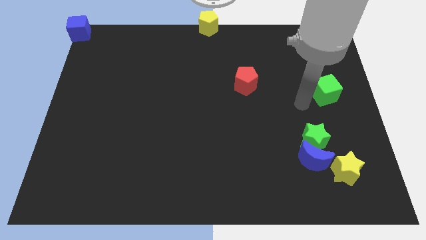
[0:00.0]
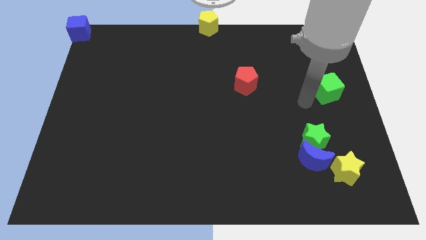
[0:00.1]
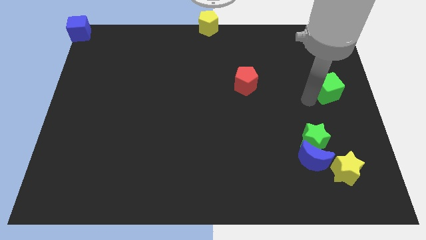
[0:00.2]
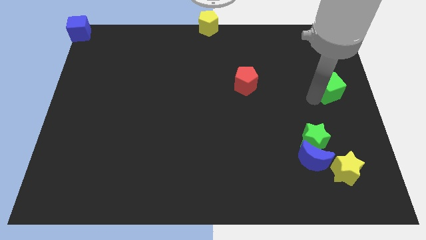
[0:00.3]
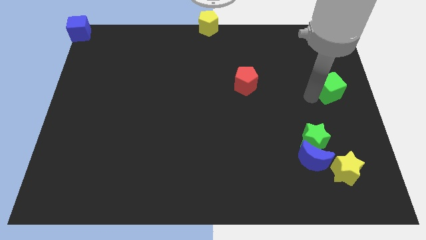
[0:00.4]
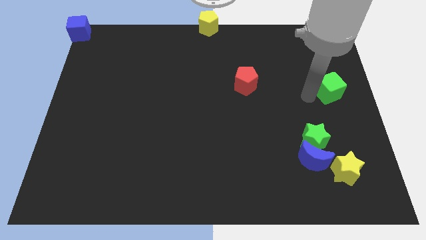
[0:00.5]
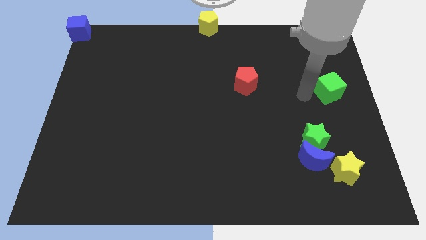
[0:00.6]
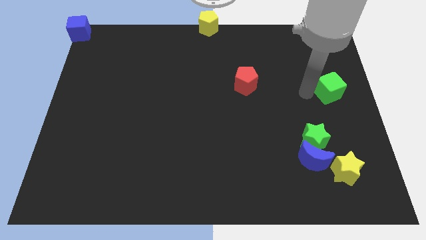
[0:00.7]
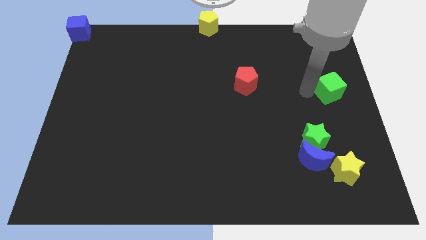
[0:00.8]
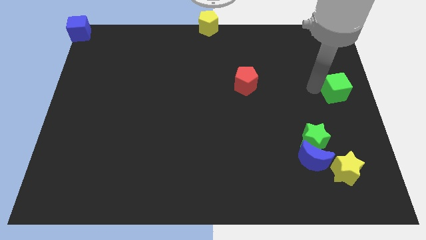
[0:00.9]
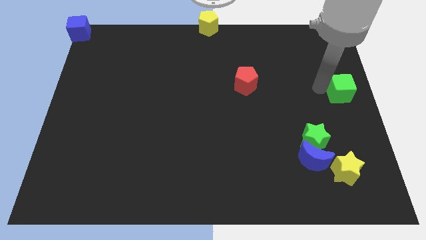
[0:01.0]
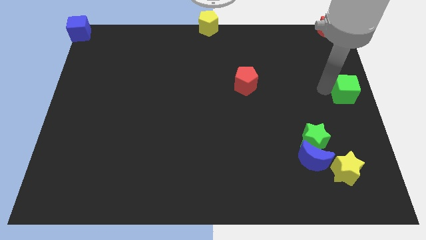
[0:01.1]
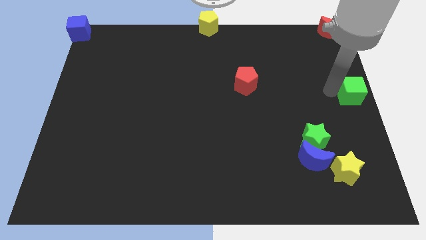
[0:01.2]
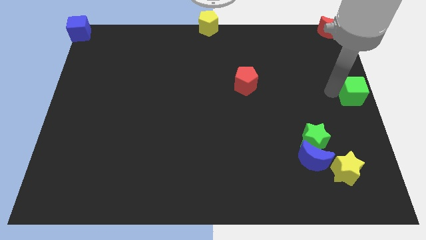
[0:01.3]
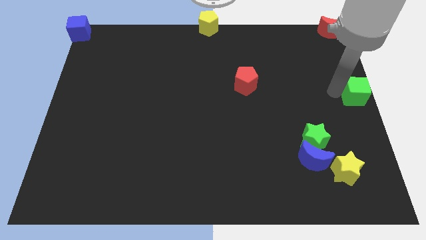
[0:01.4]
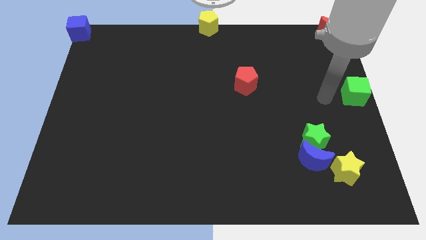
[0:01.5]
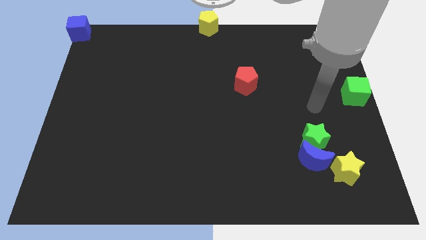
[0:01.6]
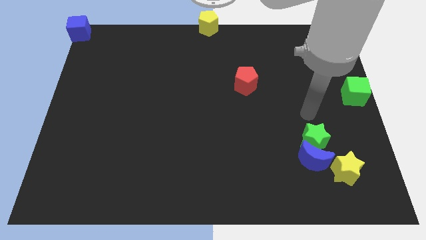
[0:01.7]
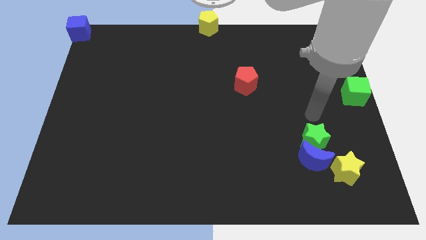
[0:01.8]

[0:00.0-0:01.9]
place the green cube to the center right of the board

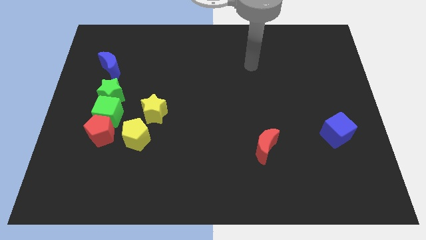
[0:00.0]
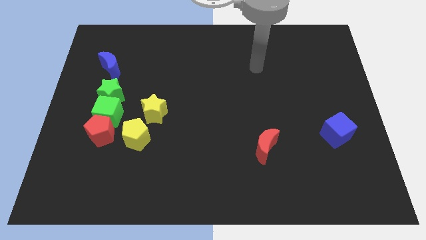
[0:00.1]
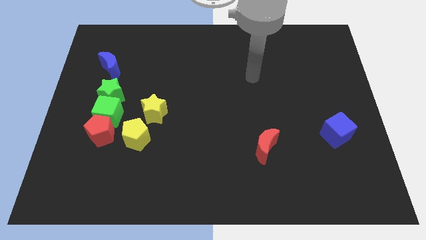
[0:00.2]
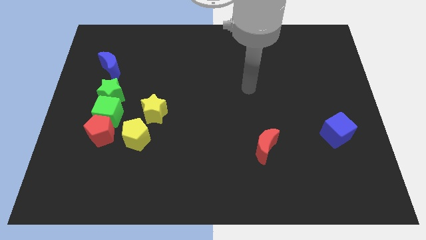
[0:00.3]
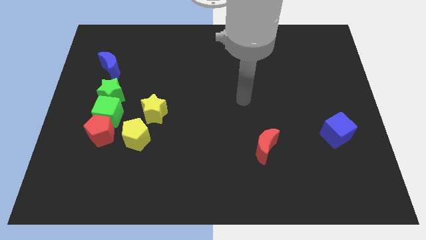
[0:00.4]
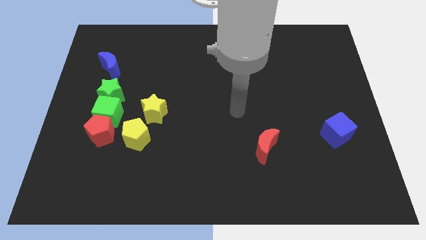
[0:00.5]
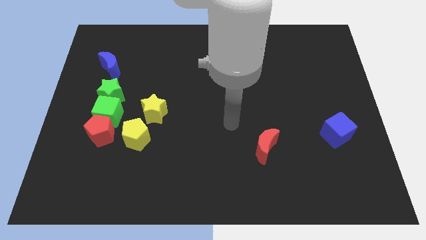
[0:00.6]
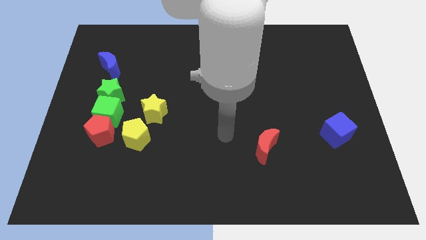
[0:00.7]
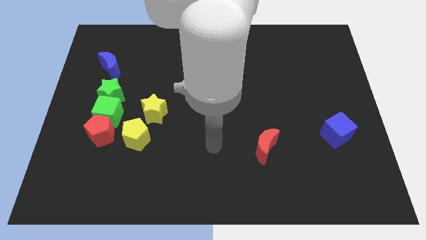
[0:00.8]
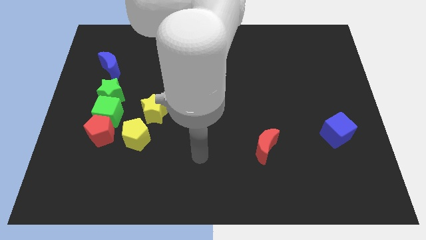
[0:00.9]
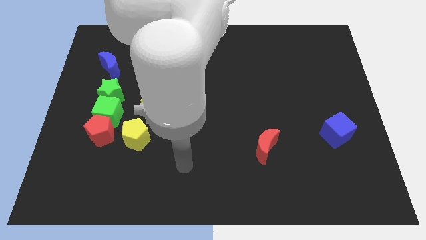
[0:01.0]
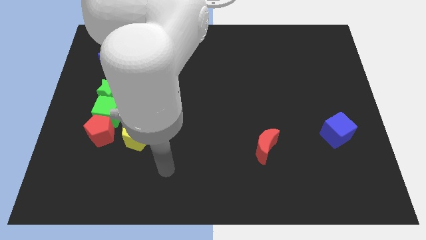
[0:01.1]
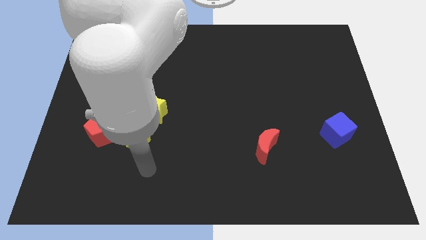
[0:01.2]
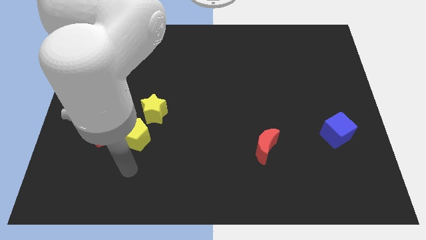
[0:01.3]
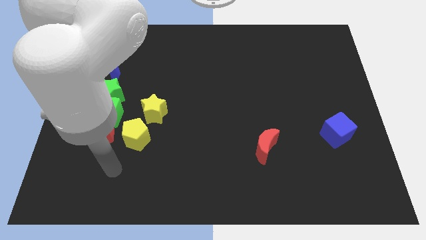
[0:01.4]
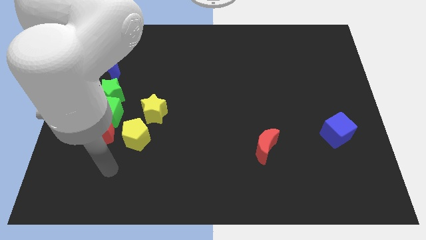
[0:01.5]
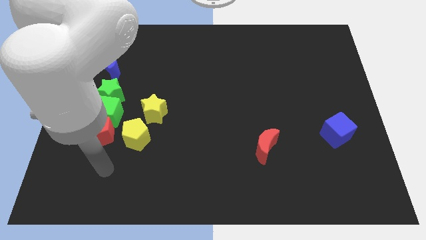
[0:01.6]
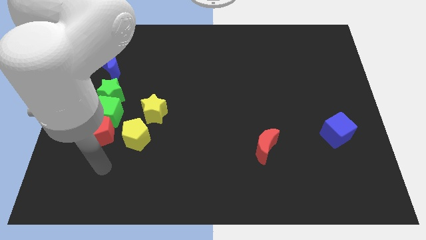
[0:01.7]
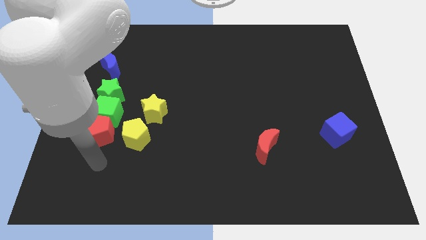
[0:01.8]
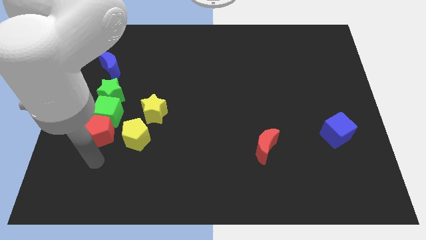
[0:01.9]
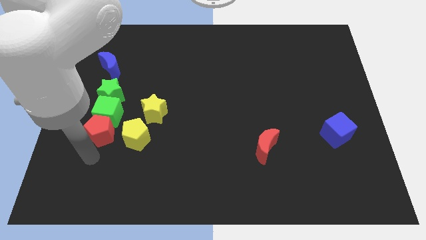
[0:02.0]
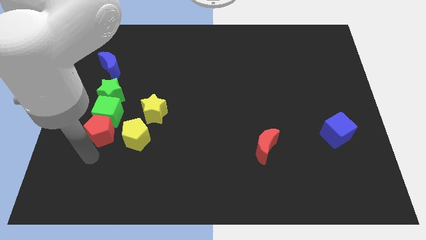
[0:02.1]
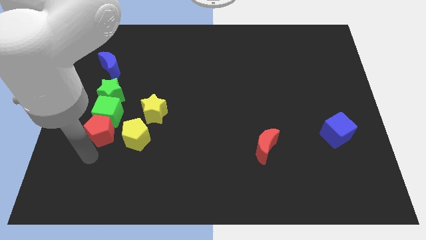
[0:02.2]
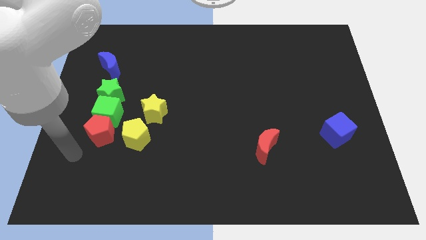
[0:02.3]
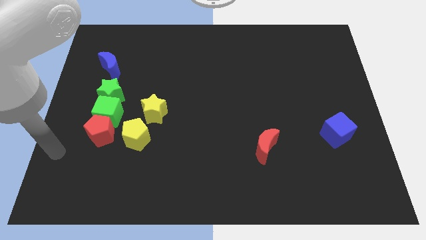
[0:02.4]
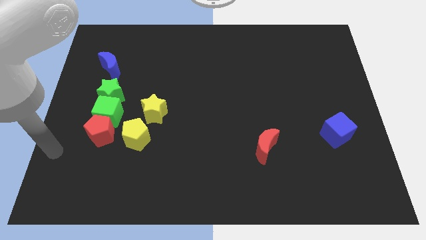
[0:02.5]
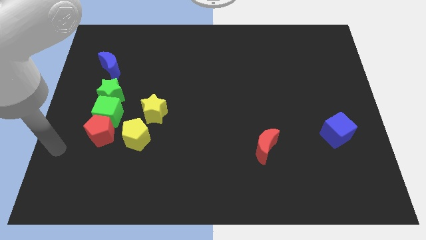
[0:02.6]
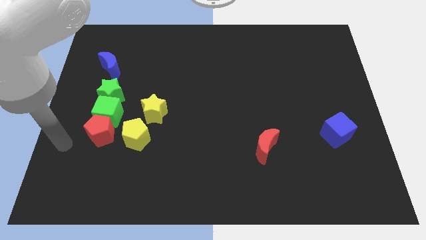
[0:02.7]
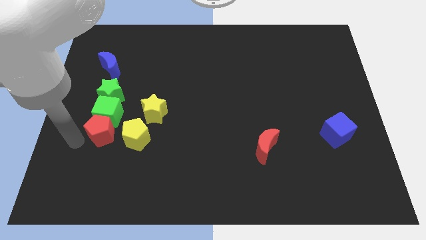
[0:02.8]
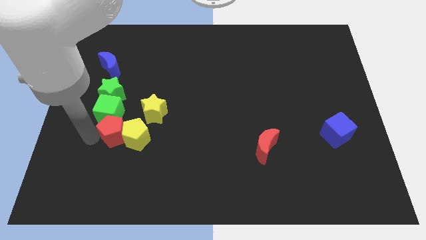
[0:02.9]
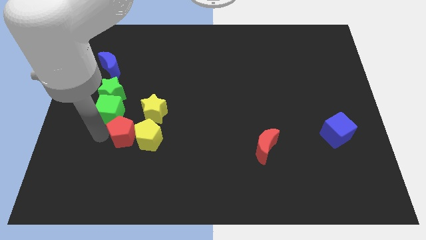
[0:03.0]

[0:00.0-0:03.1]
push the red pentagon into the left side of the yellow pentagon

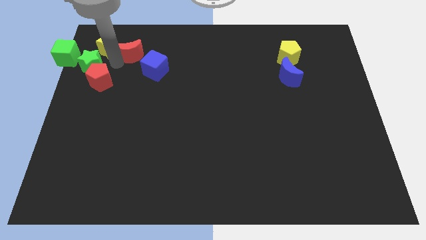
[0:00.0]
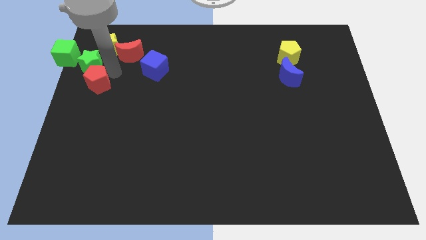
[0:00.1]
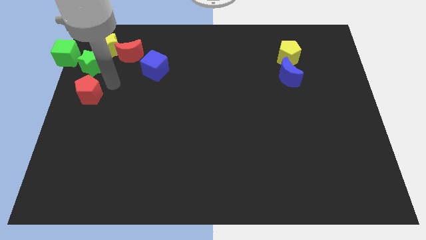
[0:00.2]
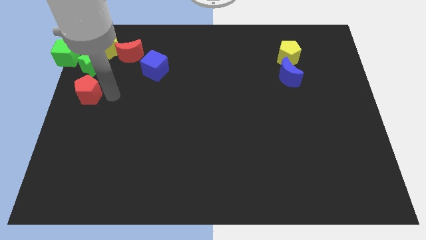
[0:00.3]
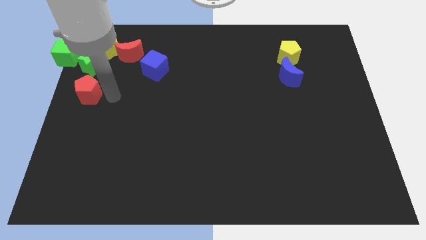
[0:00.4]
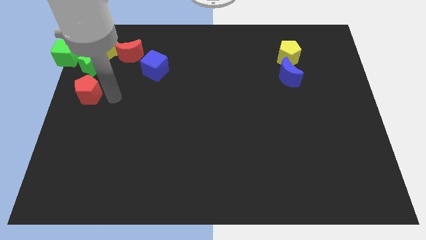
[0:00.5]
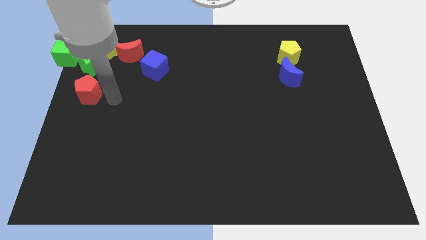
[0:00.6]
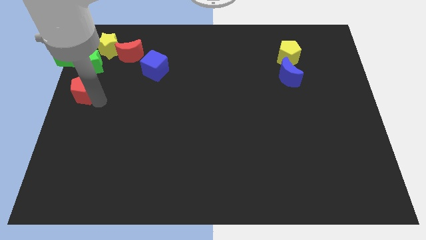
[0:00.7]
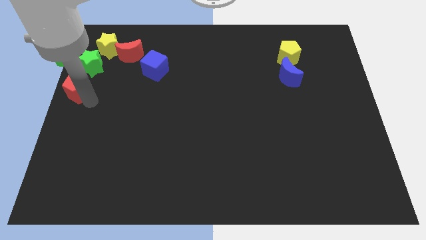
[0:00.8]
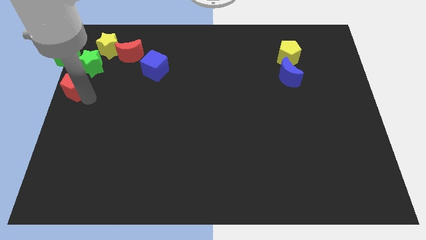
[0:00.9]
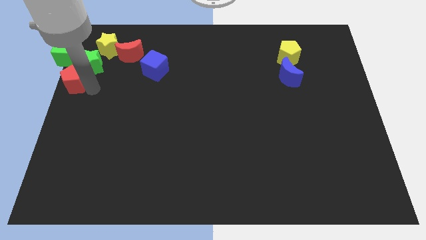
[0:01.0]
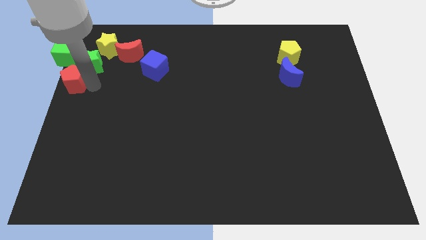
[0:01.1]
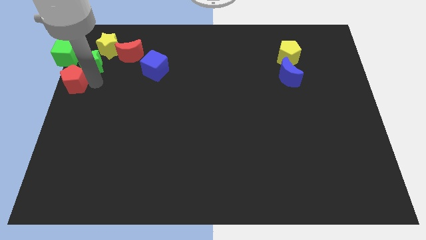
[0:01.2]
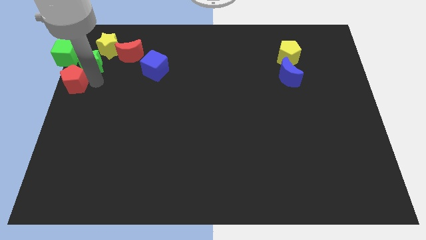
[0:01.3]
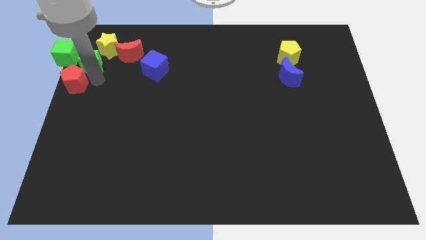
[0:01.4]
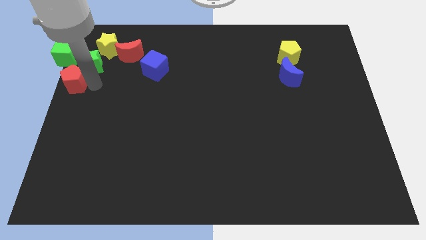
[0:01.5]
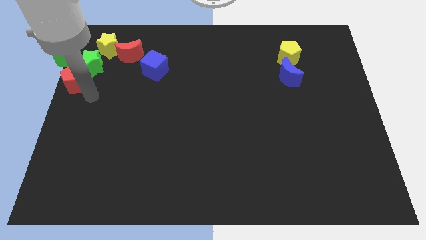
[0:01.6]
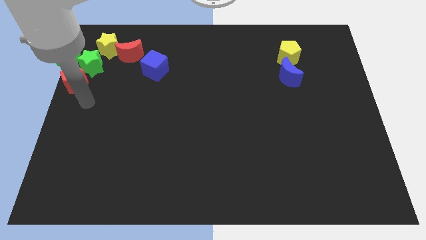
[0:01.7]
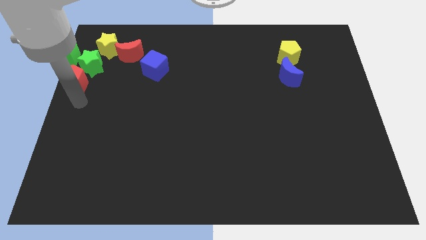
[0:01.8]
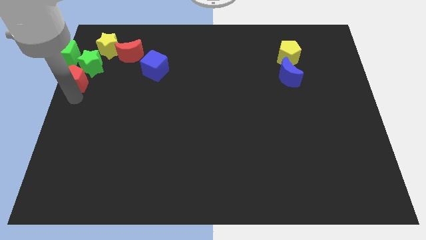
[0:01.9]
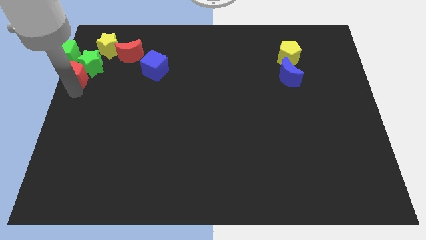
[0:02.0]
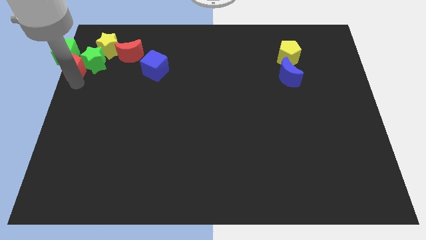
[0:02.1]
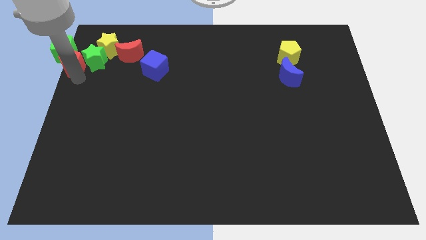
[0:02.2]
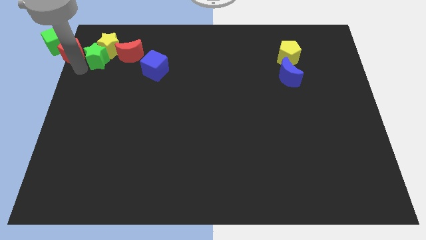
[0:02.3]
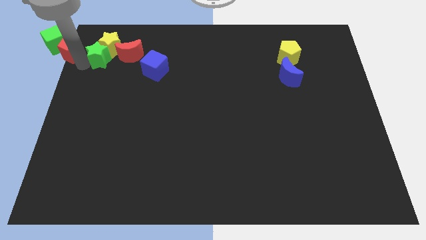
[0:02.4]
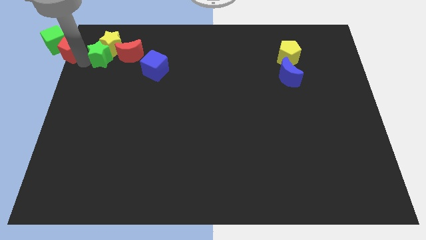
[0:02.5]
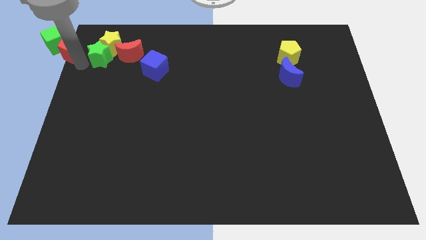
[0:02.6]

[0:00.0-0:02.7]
push the red pentagon to the right of the green star

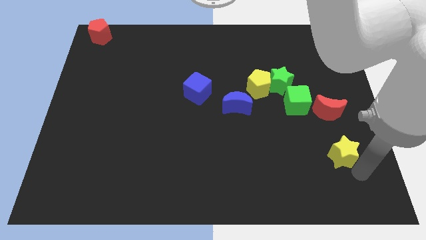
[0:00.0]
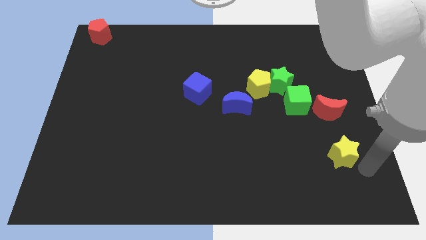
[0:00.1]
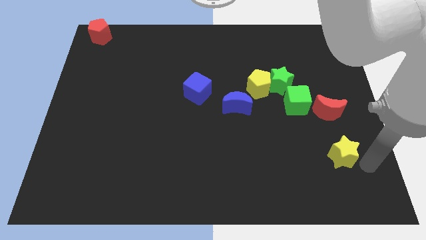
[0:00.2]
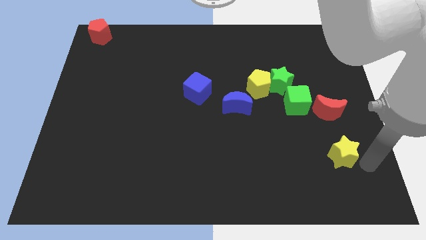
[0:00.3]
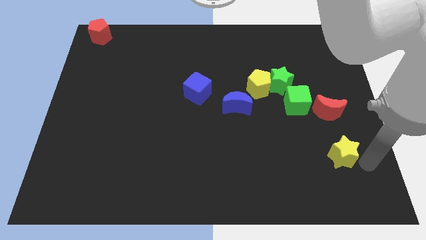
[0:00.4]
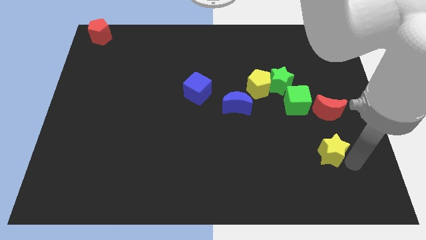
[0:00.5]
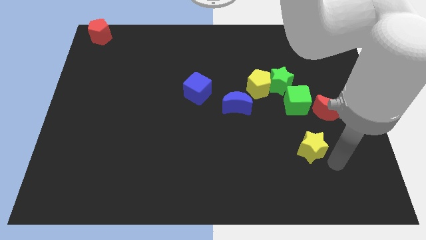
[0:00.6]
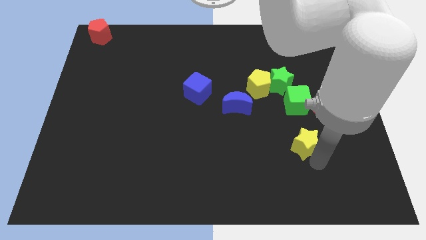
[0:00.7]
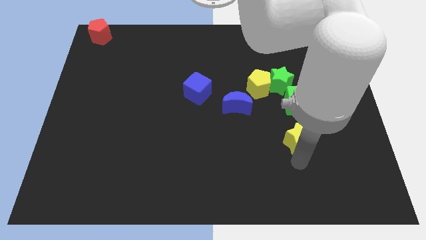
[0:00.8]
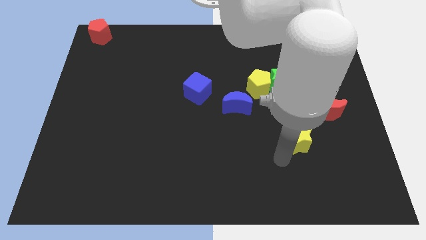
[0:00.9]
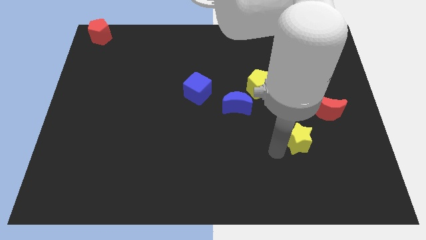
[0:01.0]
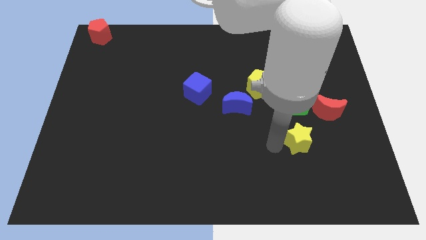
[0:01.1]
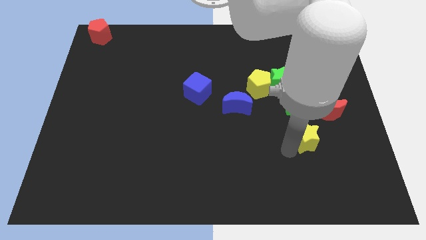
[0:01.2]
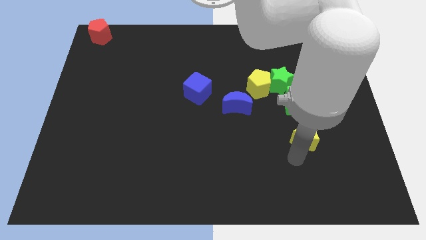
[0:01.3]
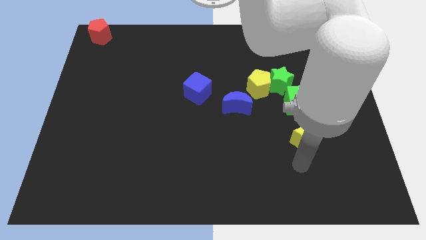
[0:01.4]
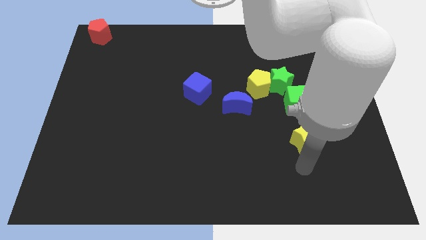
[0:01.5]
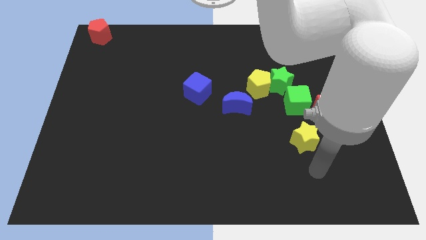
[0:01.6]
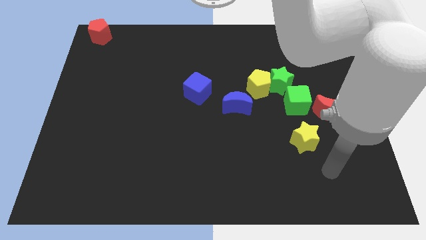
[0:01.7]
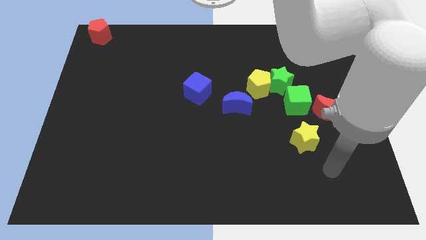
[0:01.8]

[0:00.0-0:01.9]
place the yellow star down to the green cube
